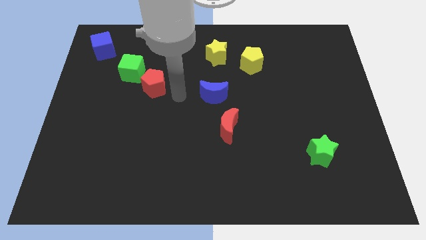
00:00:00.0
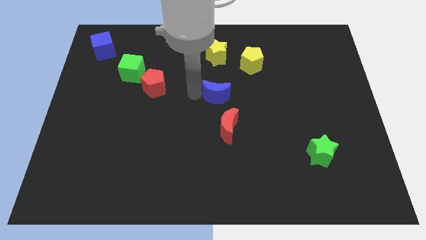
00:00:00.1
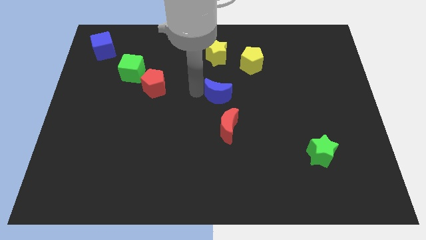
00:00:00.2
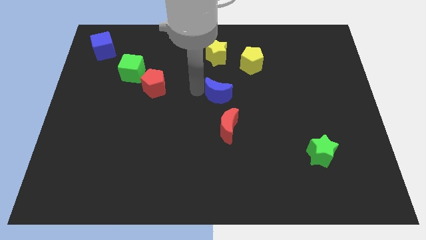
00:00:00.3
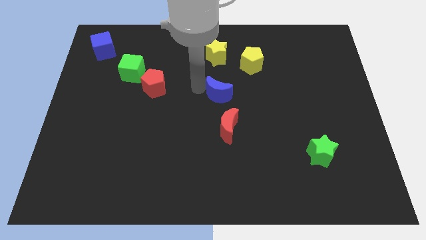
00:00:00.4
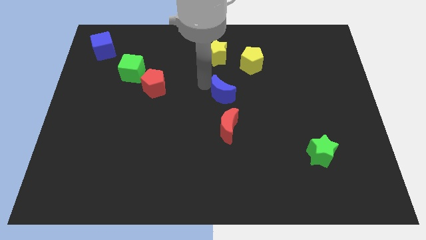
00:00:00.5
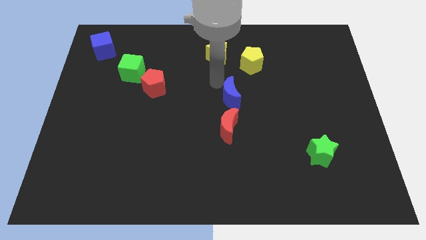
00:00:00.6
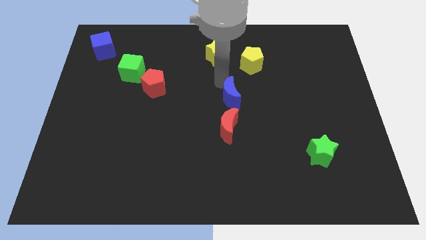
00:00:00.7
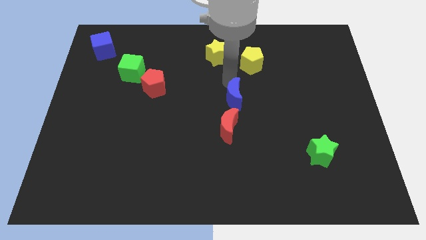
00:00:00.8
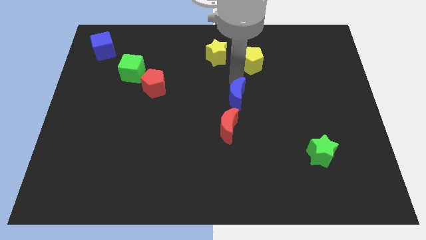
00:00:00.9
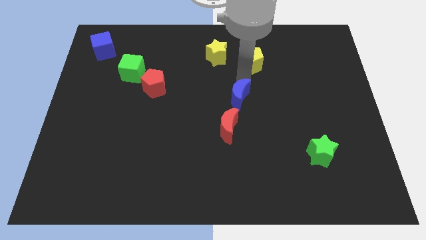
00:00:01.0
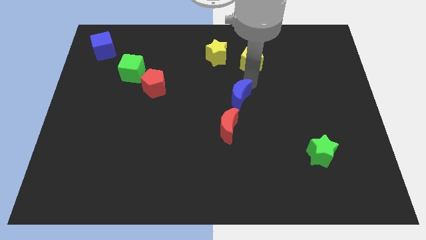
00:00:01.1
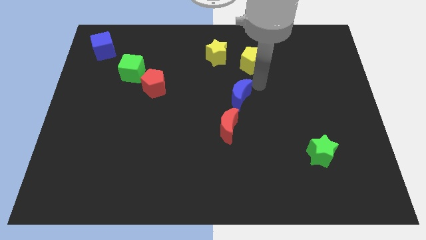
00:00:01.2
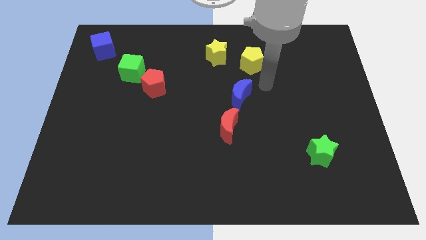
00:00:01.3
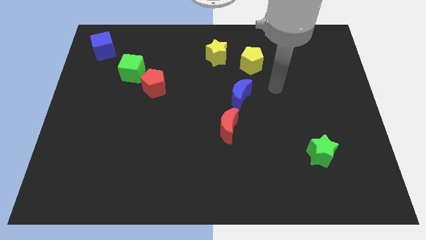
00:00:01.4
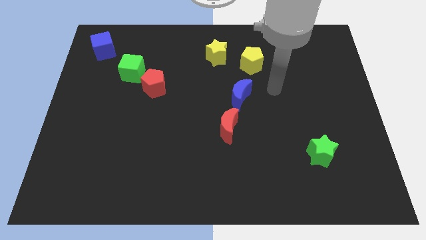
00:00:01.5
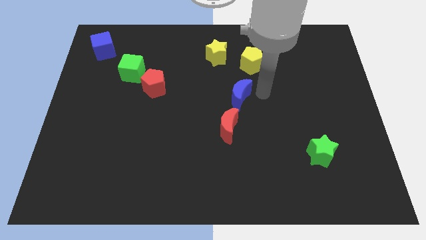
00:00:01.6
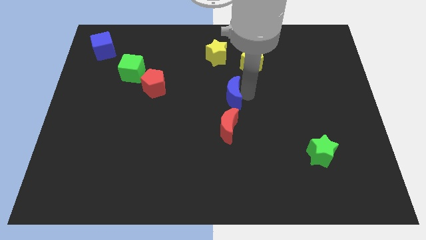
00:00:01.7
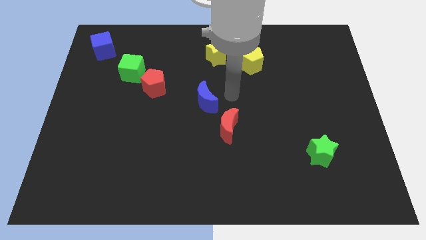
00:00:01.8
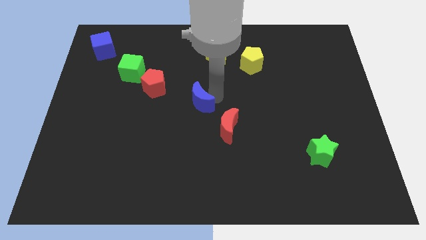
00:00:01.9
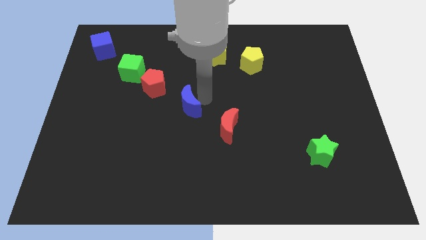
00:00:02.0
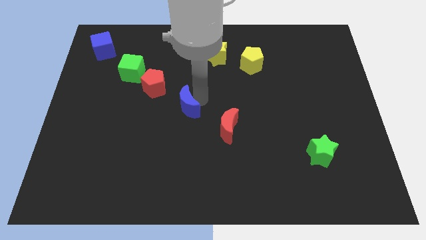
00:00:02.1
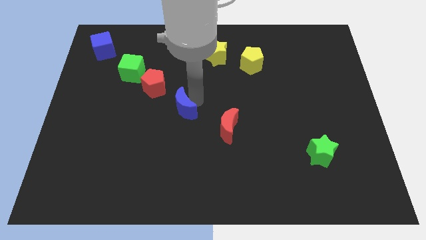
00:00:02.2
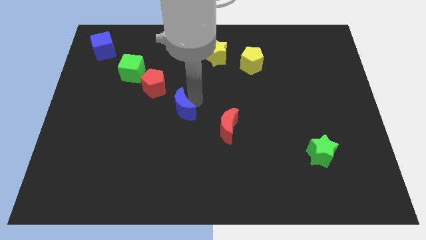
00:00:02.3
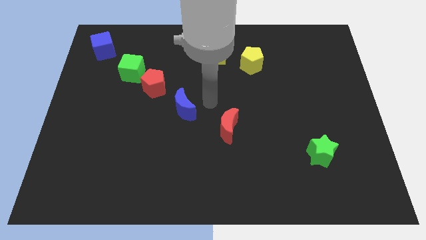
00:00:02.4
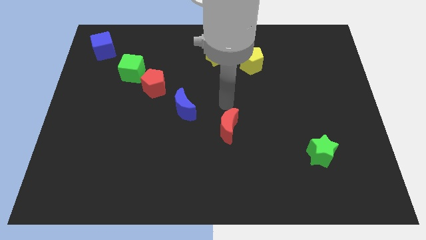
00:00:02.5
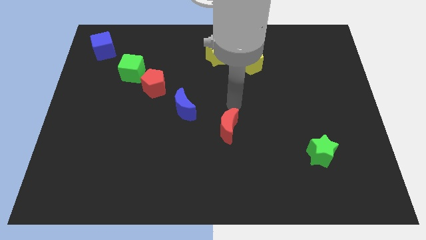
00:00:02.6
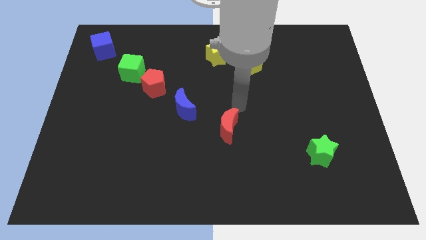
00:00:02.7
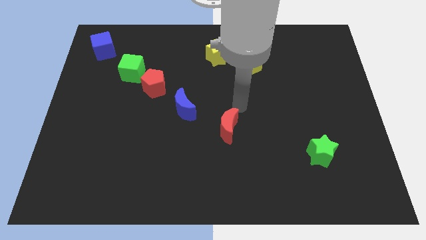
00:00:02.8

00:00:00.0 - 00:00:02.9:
place the blue crescent in between the red blocks

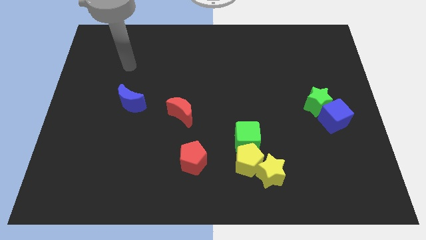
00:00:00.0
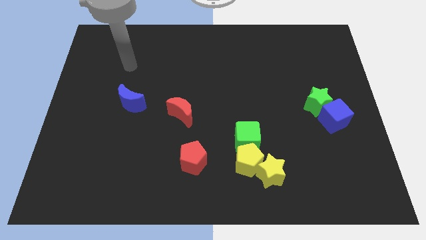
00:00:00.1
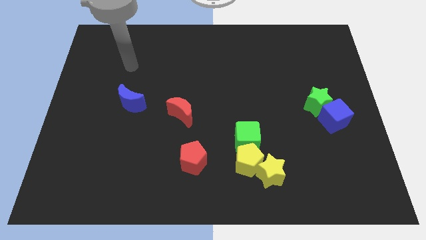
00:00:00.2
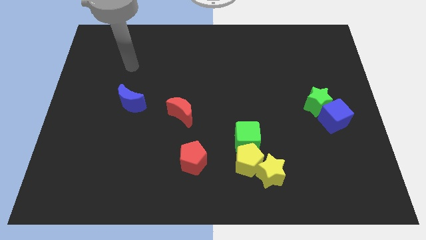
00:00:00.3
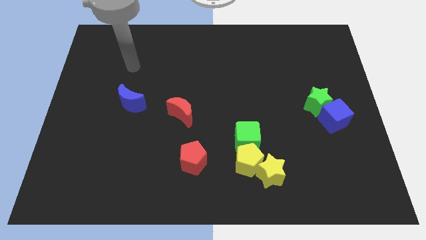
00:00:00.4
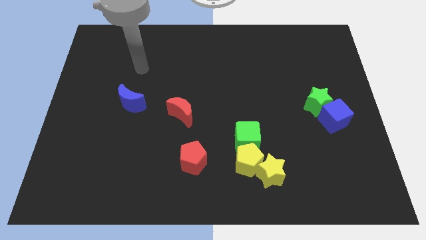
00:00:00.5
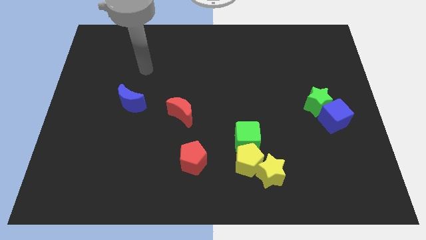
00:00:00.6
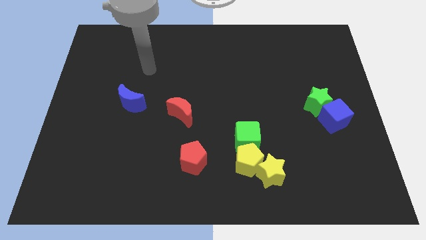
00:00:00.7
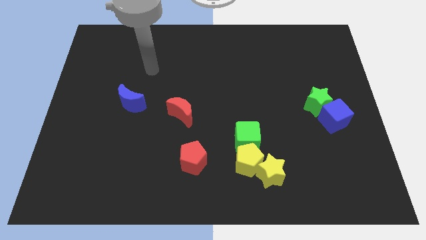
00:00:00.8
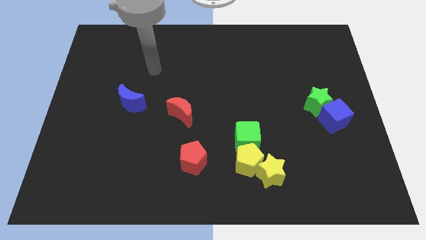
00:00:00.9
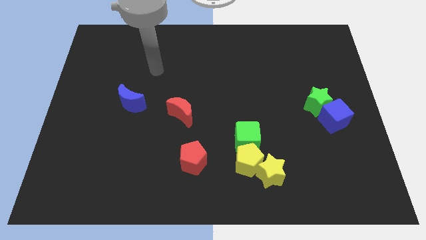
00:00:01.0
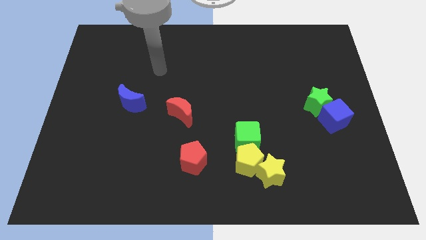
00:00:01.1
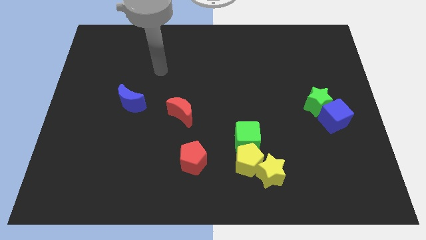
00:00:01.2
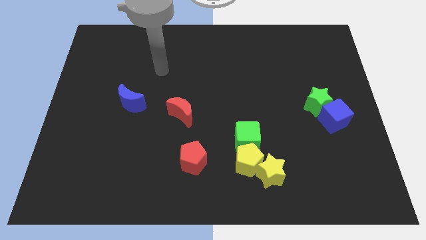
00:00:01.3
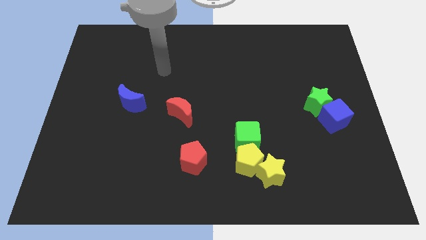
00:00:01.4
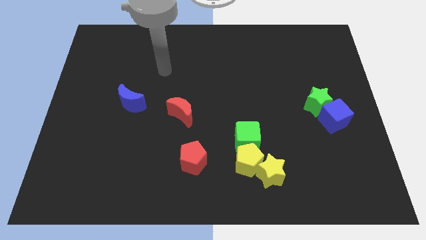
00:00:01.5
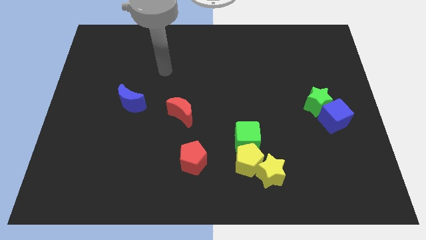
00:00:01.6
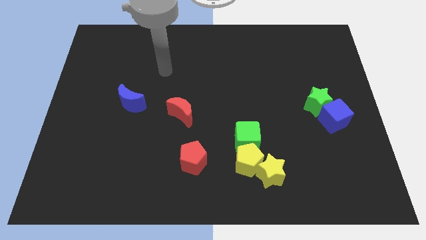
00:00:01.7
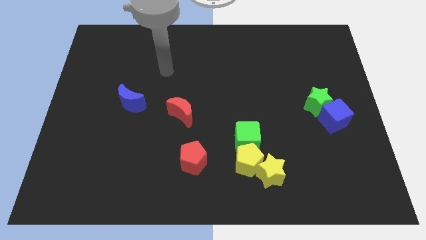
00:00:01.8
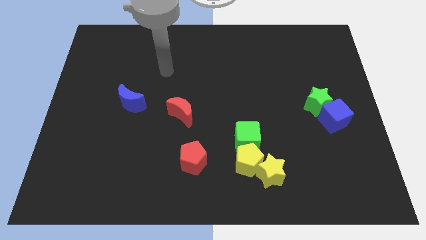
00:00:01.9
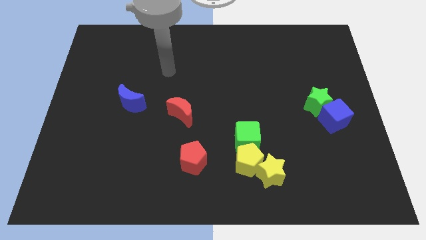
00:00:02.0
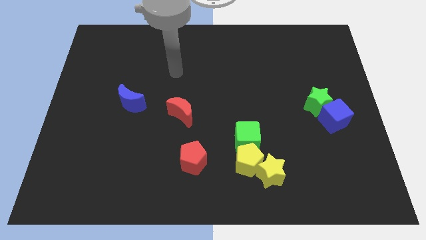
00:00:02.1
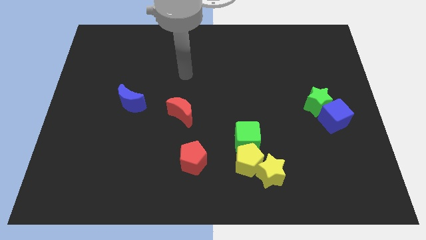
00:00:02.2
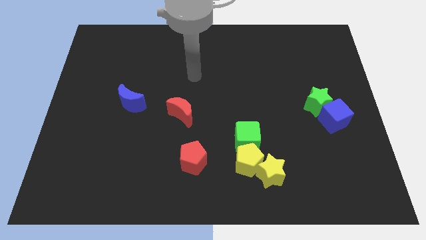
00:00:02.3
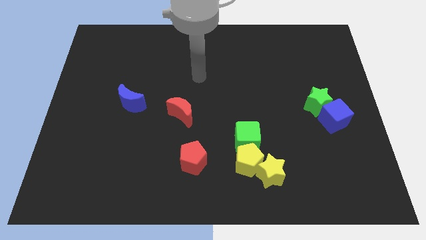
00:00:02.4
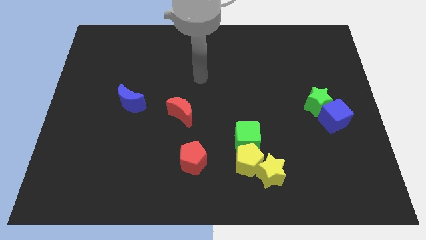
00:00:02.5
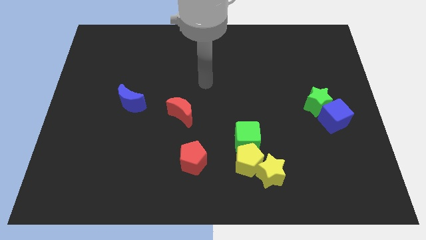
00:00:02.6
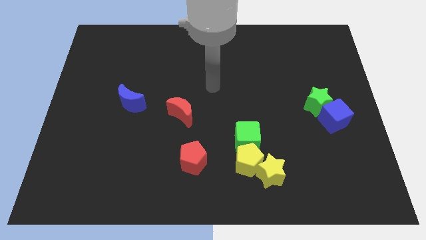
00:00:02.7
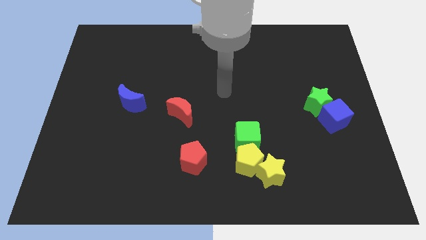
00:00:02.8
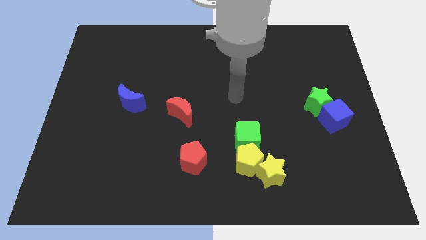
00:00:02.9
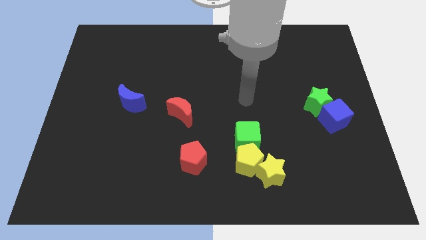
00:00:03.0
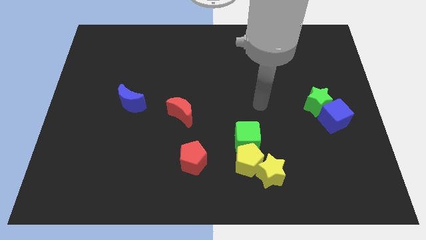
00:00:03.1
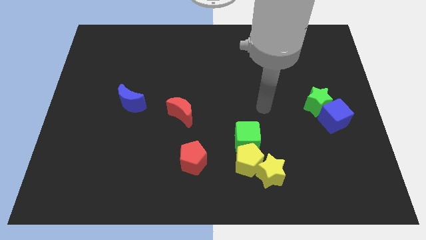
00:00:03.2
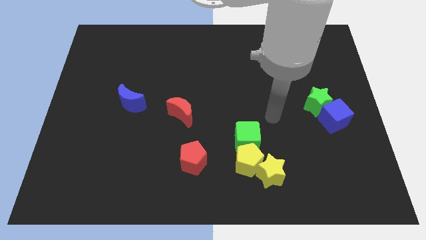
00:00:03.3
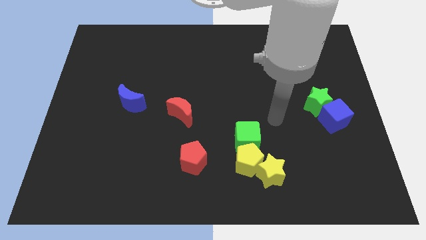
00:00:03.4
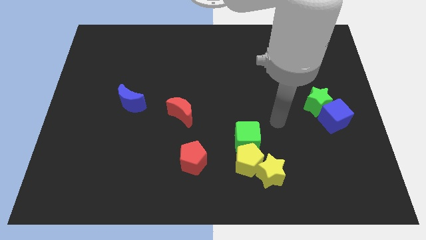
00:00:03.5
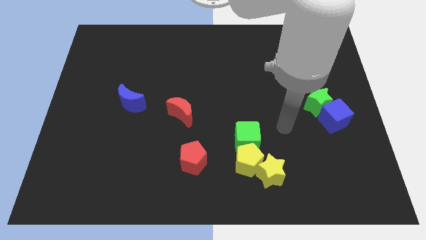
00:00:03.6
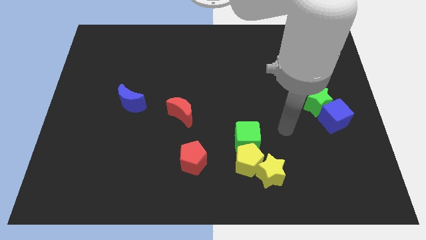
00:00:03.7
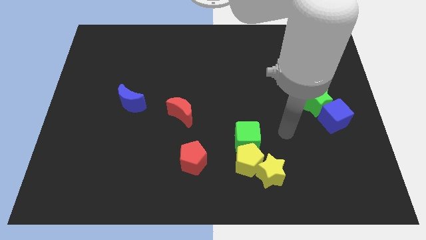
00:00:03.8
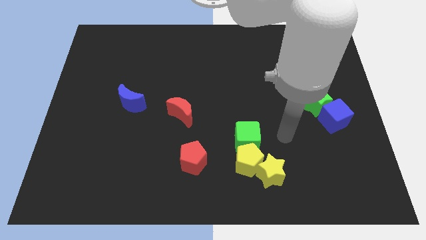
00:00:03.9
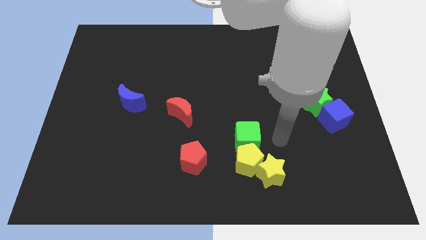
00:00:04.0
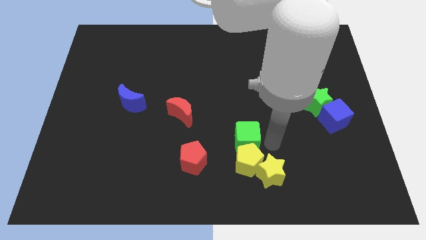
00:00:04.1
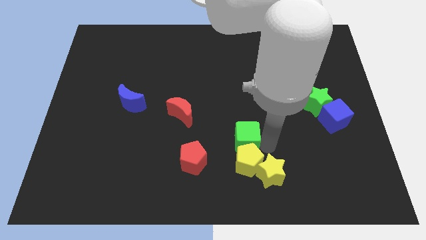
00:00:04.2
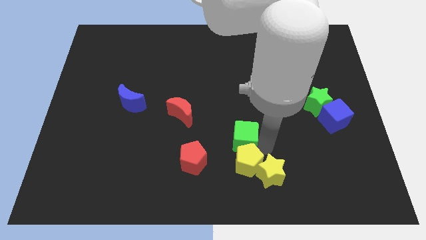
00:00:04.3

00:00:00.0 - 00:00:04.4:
touch the green cube

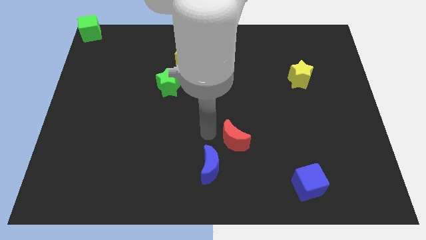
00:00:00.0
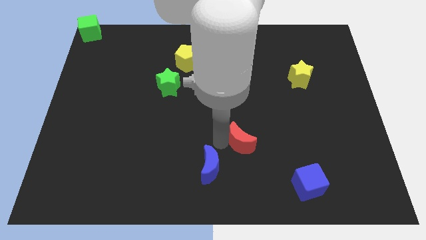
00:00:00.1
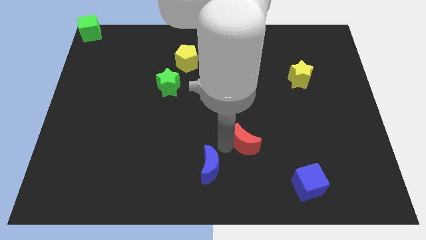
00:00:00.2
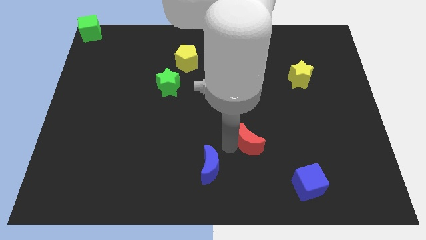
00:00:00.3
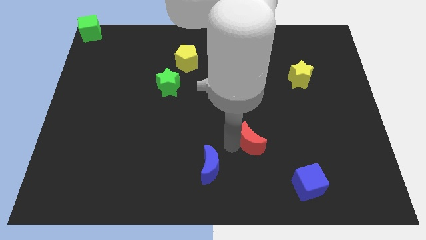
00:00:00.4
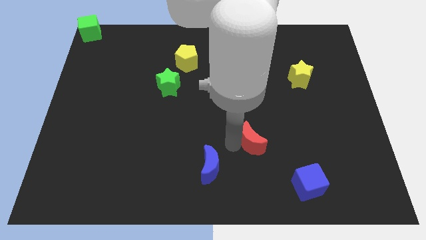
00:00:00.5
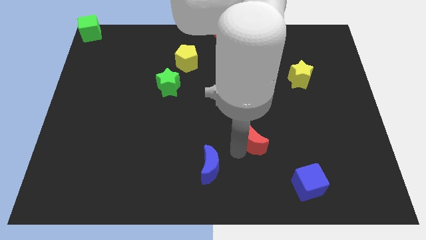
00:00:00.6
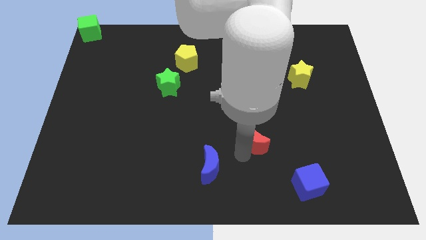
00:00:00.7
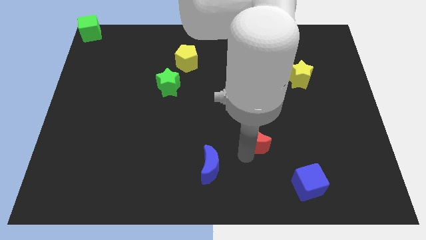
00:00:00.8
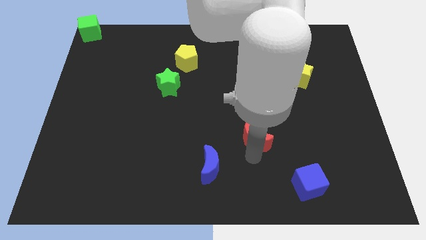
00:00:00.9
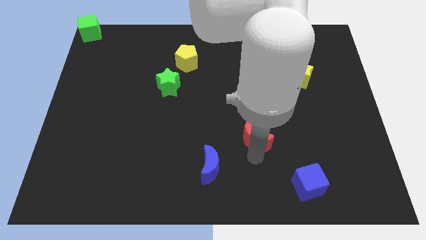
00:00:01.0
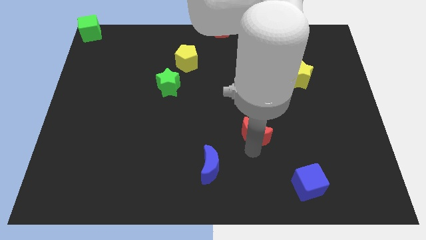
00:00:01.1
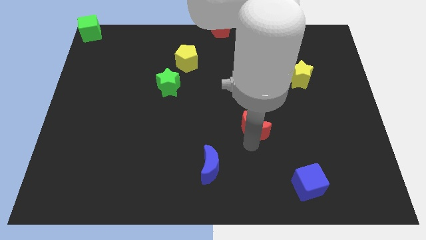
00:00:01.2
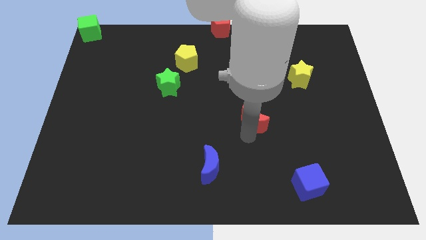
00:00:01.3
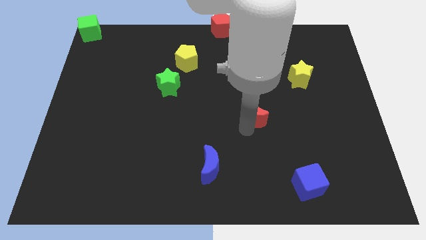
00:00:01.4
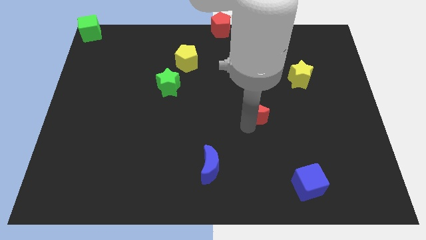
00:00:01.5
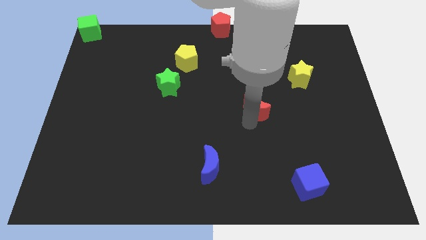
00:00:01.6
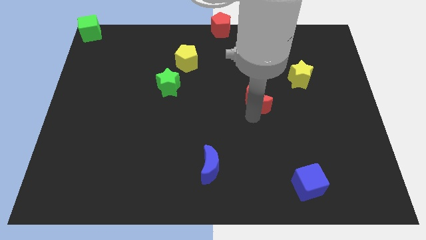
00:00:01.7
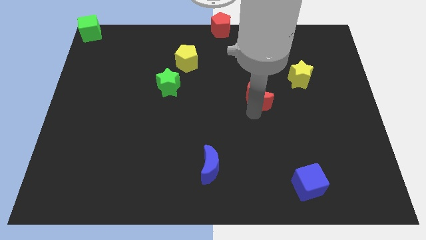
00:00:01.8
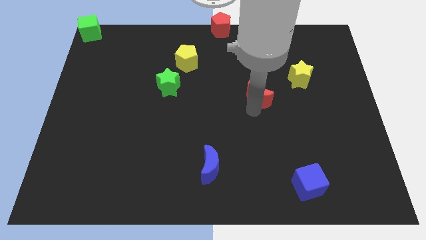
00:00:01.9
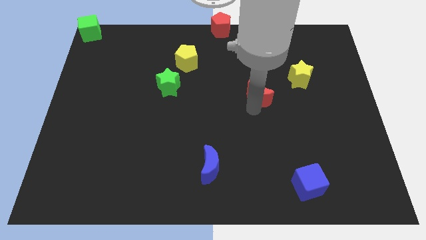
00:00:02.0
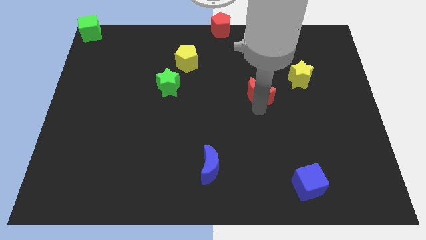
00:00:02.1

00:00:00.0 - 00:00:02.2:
slide the red moon towards up
